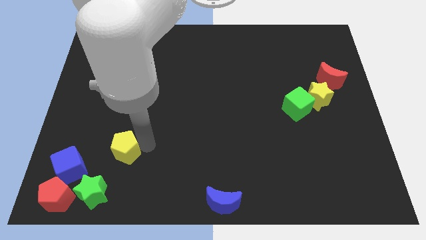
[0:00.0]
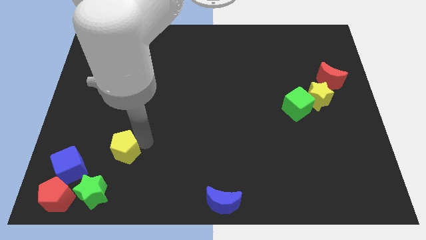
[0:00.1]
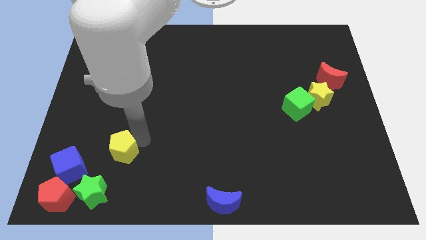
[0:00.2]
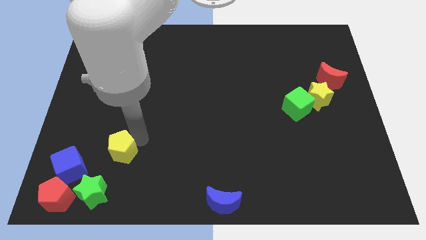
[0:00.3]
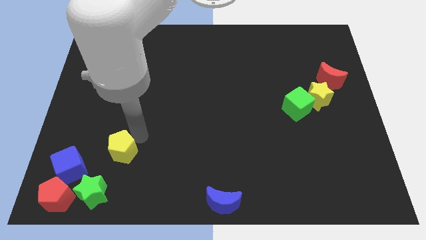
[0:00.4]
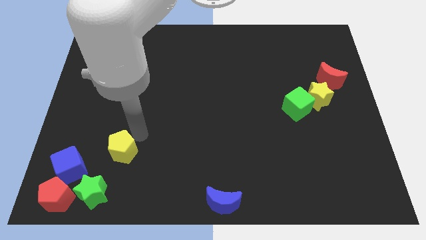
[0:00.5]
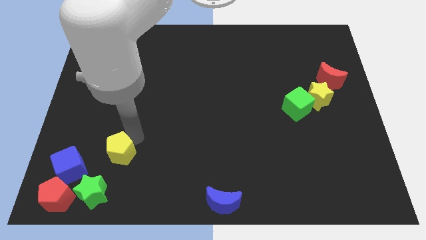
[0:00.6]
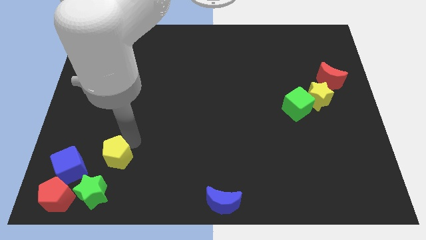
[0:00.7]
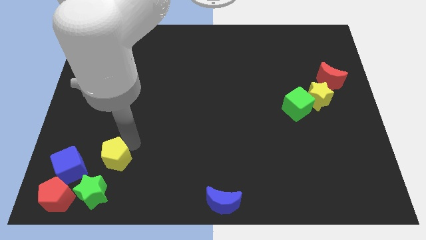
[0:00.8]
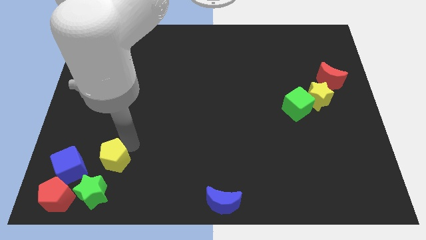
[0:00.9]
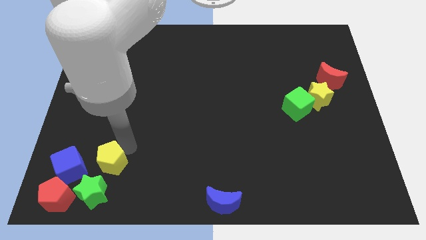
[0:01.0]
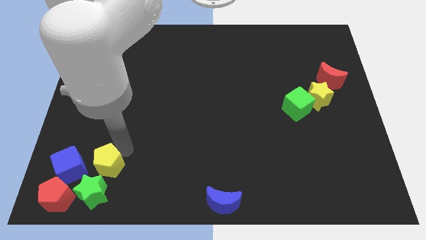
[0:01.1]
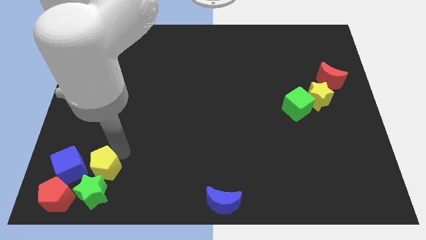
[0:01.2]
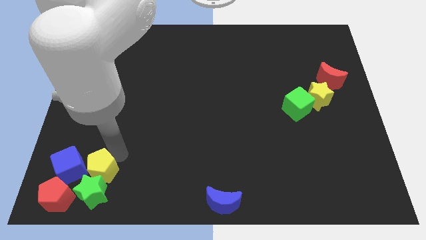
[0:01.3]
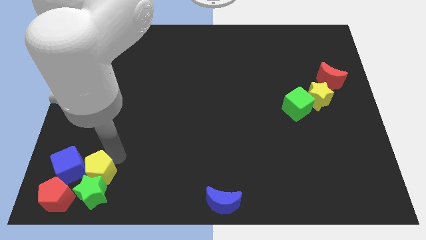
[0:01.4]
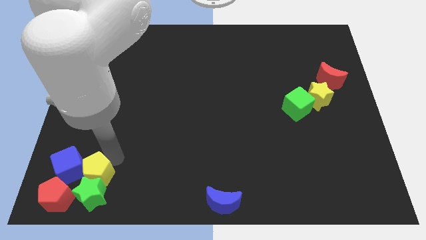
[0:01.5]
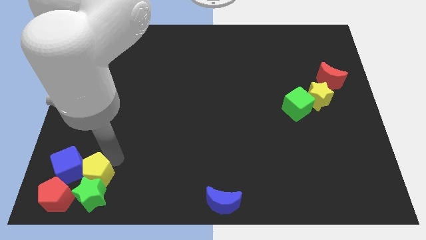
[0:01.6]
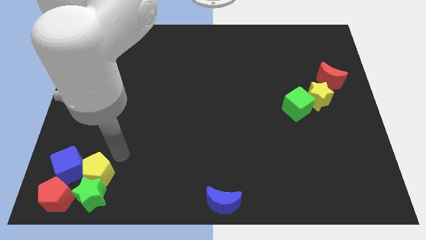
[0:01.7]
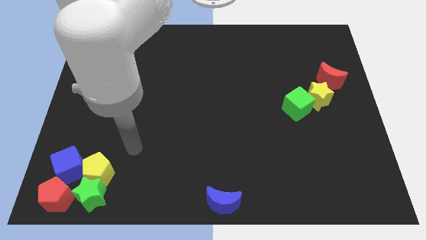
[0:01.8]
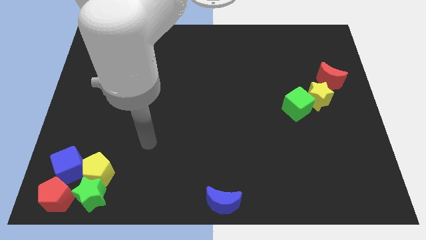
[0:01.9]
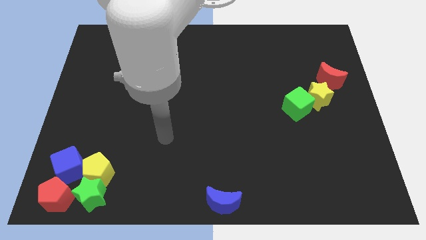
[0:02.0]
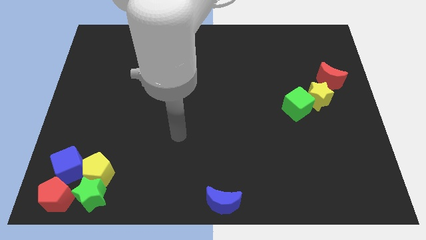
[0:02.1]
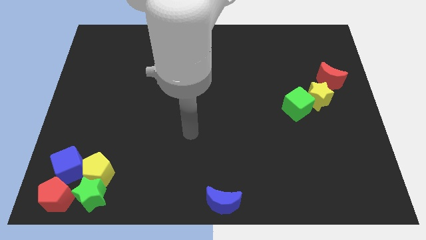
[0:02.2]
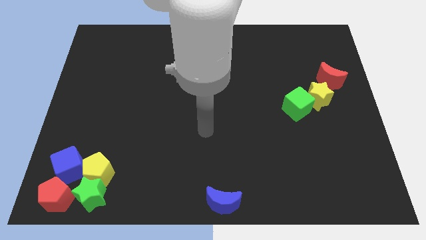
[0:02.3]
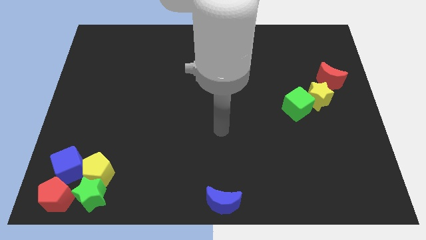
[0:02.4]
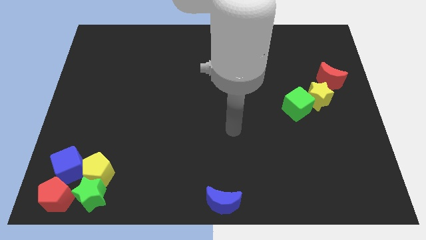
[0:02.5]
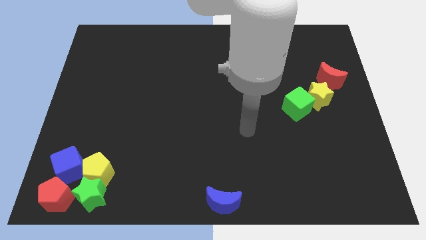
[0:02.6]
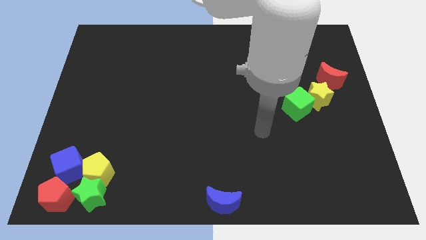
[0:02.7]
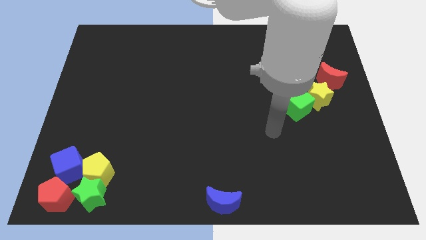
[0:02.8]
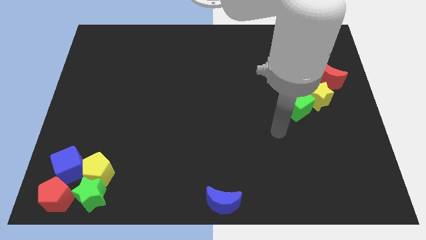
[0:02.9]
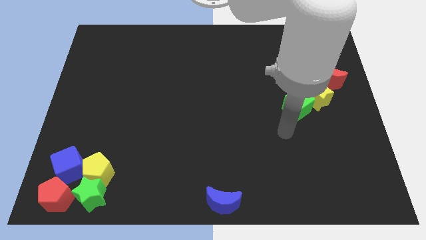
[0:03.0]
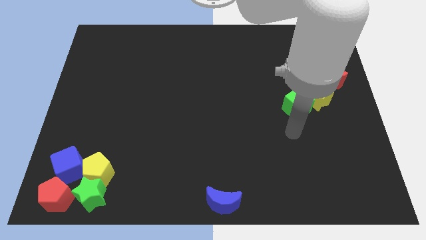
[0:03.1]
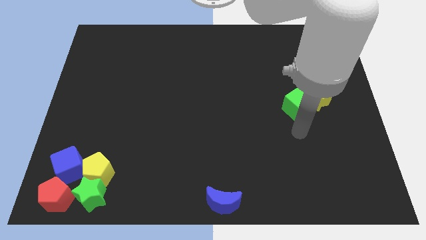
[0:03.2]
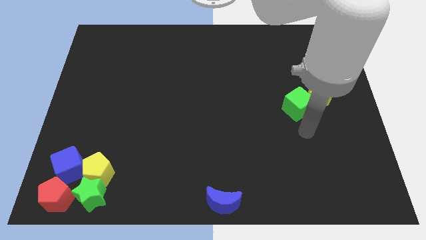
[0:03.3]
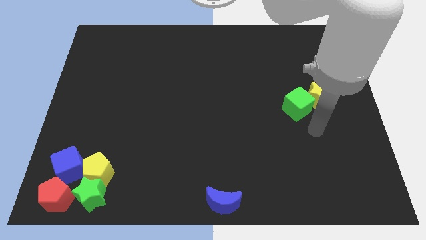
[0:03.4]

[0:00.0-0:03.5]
move yellow pentagon in between green star and blue cube

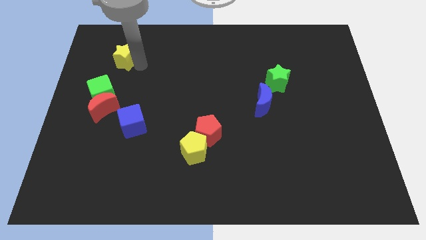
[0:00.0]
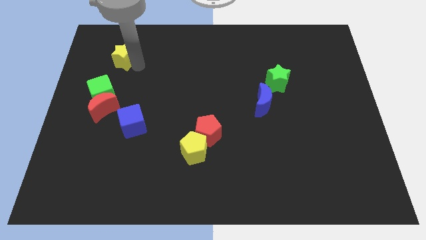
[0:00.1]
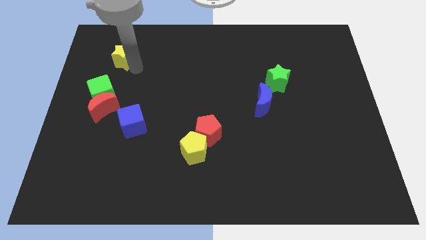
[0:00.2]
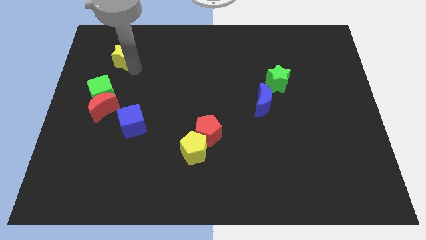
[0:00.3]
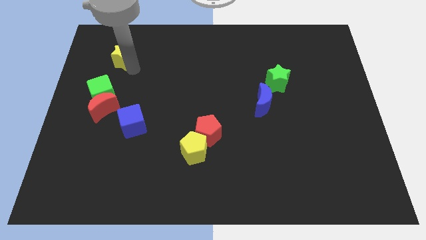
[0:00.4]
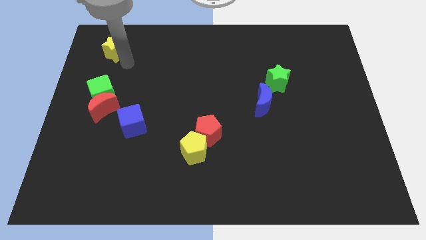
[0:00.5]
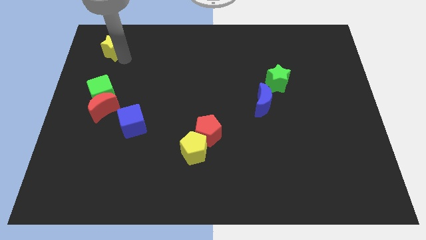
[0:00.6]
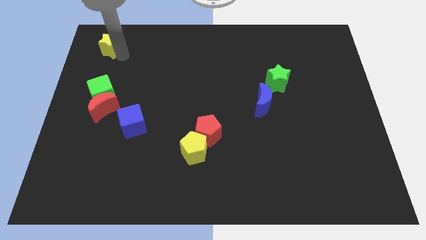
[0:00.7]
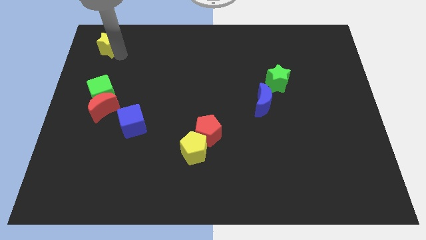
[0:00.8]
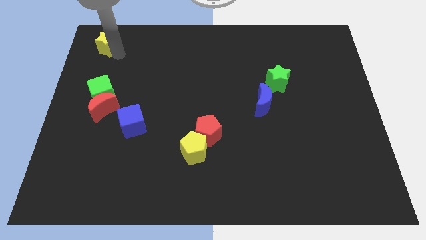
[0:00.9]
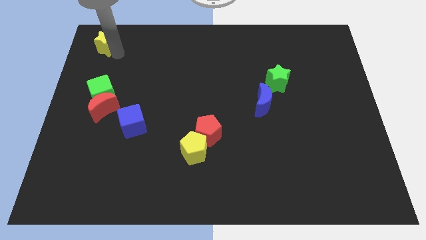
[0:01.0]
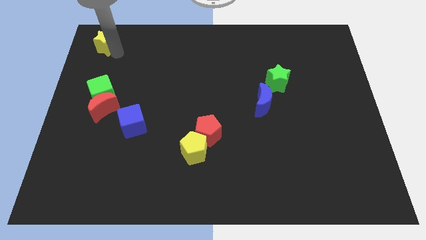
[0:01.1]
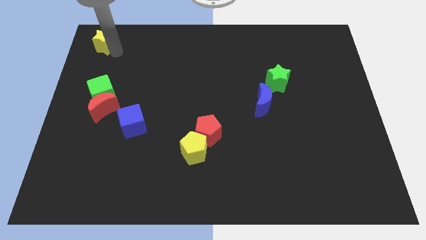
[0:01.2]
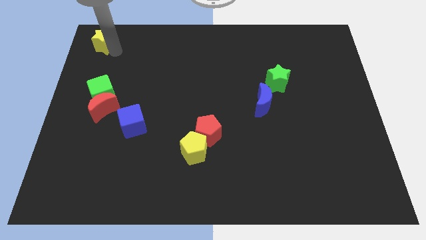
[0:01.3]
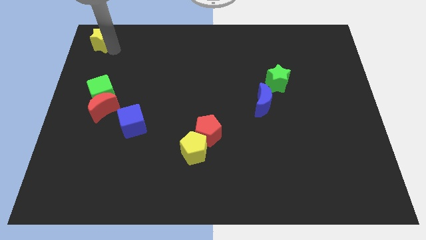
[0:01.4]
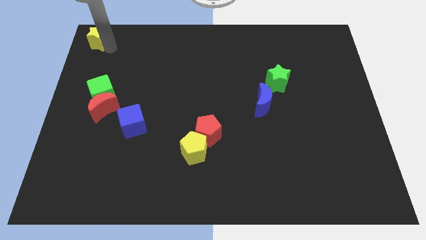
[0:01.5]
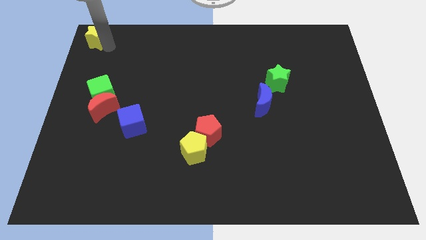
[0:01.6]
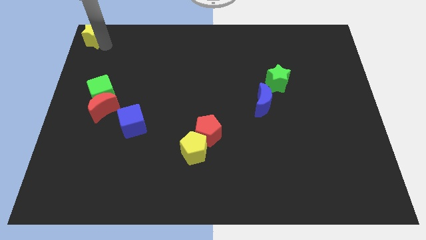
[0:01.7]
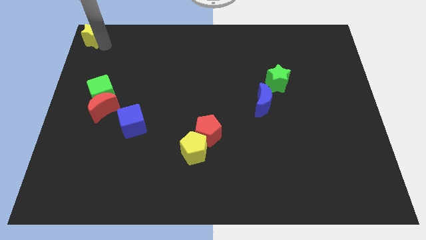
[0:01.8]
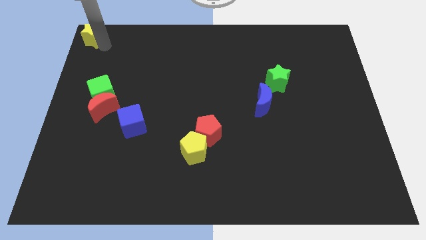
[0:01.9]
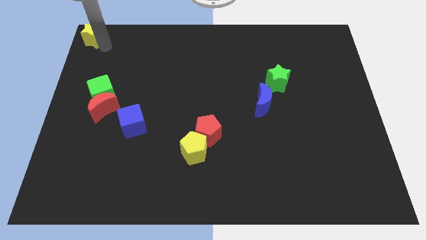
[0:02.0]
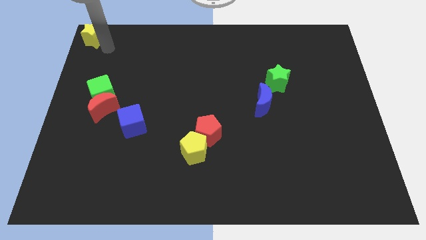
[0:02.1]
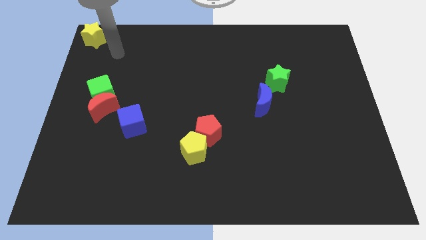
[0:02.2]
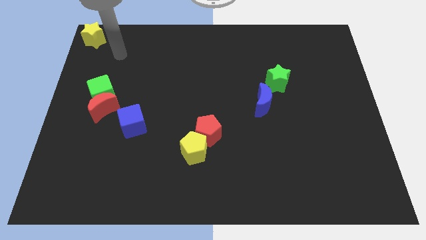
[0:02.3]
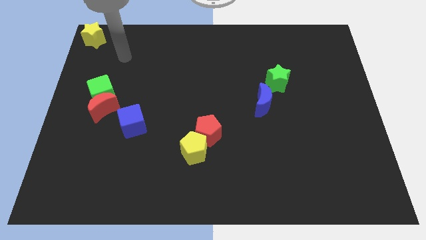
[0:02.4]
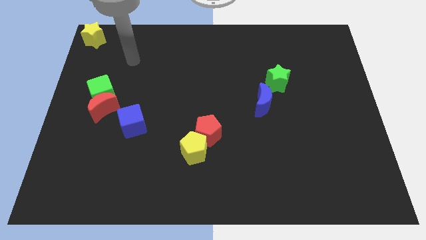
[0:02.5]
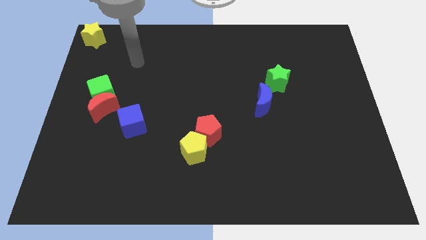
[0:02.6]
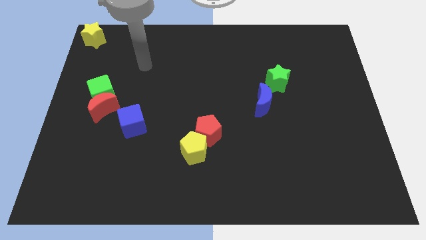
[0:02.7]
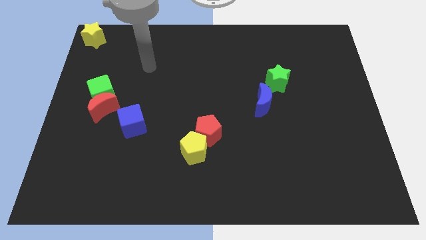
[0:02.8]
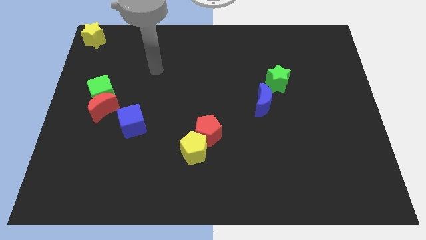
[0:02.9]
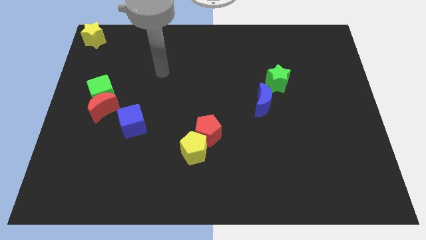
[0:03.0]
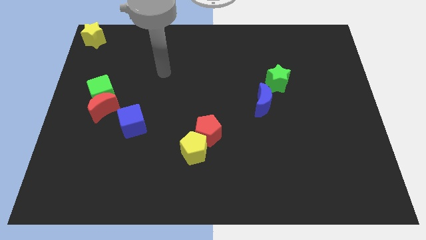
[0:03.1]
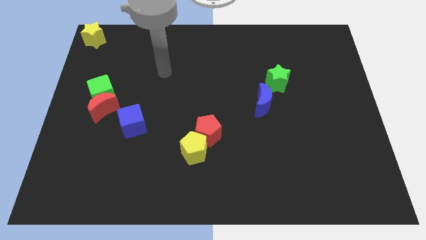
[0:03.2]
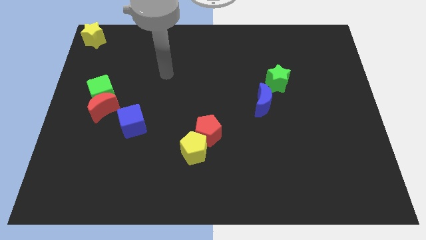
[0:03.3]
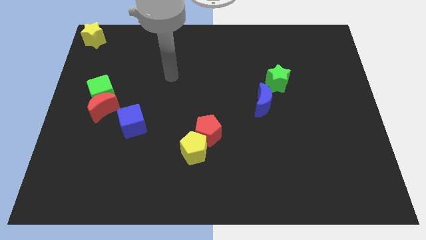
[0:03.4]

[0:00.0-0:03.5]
place the yellow star to the top left corner of the board

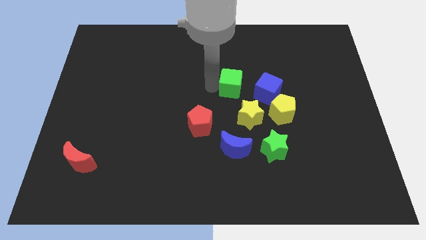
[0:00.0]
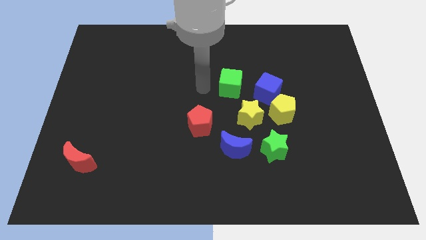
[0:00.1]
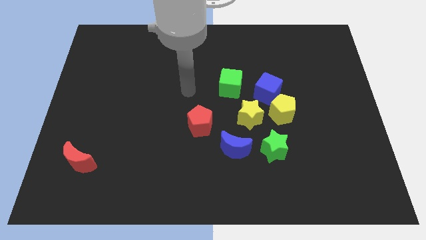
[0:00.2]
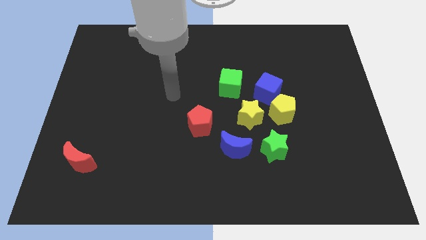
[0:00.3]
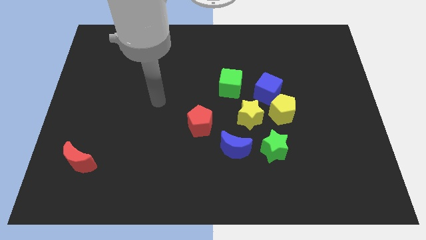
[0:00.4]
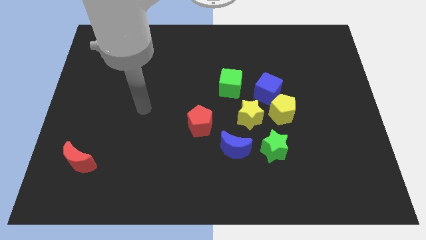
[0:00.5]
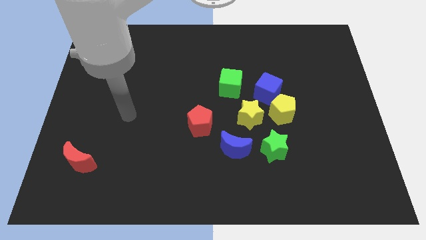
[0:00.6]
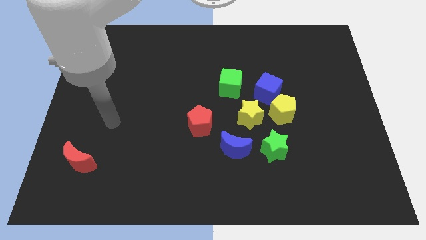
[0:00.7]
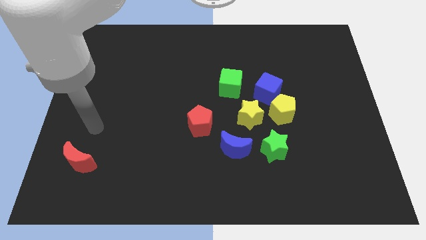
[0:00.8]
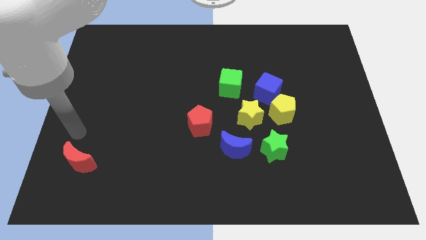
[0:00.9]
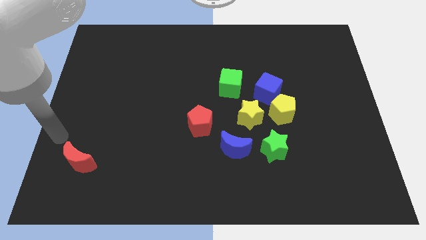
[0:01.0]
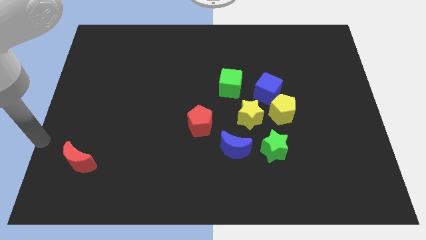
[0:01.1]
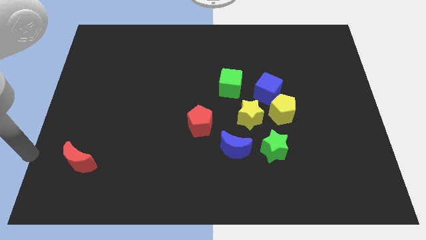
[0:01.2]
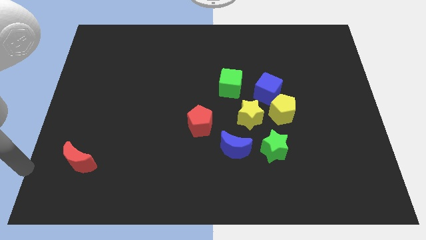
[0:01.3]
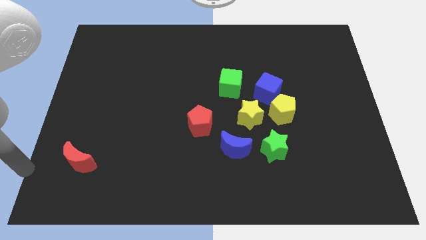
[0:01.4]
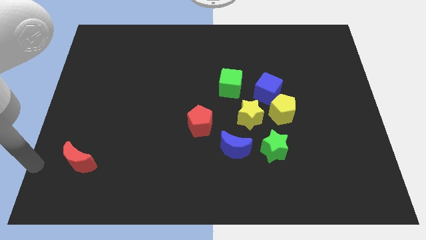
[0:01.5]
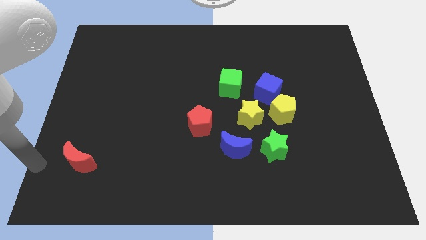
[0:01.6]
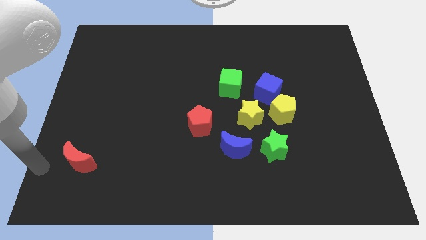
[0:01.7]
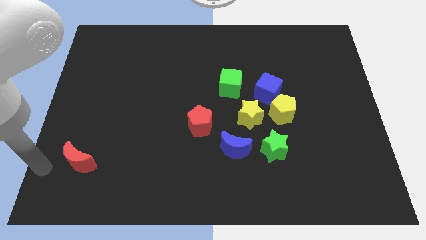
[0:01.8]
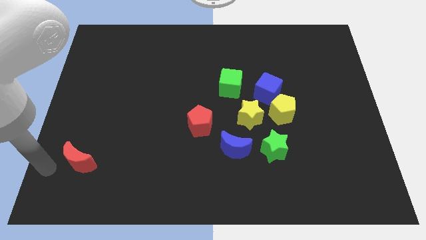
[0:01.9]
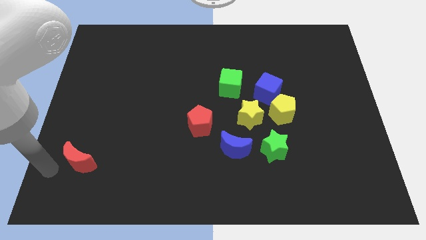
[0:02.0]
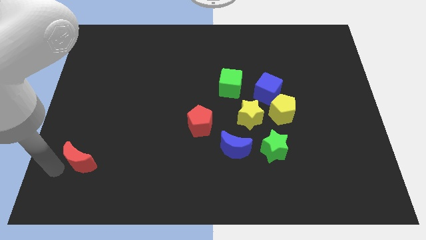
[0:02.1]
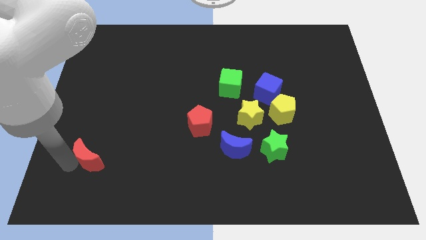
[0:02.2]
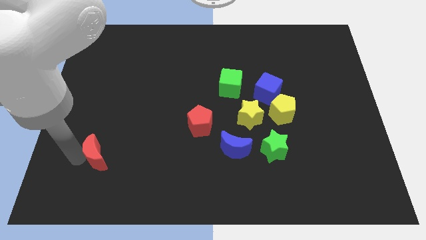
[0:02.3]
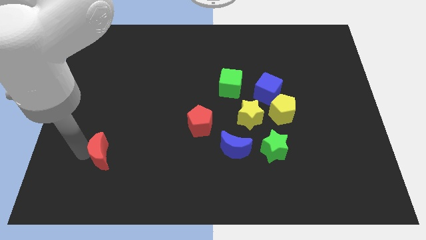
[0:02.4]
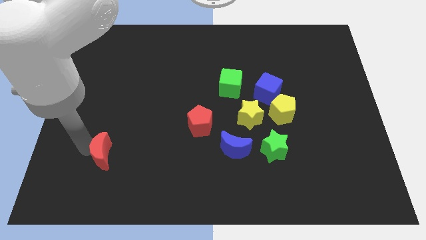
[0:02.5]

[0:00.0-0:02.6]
move your arm near red moon
